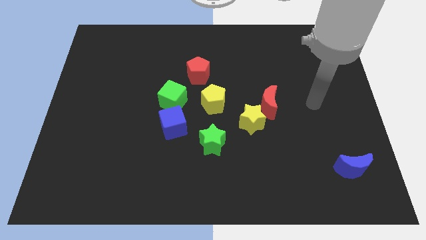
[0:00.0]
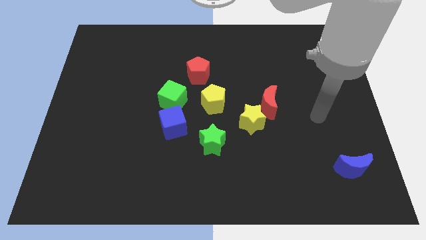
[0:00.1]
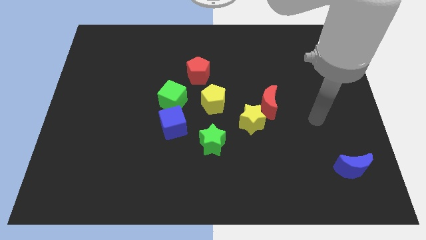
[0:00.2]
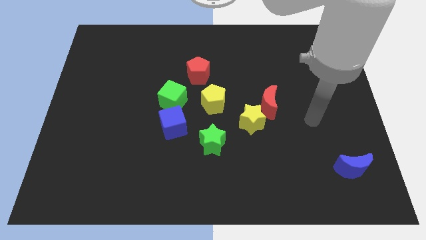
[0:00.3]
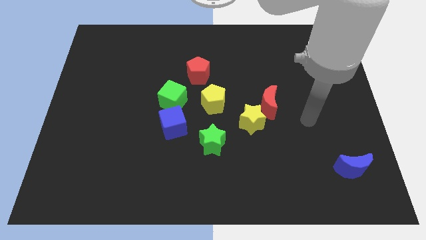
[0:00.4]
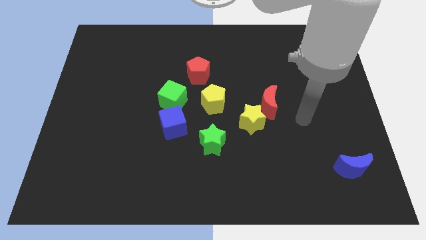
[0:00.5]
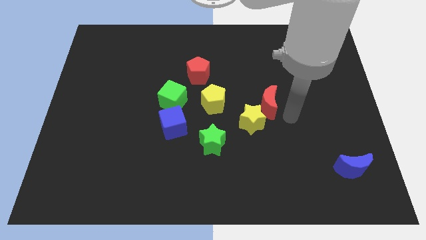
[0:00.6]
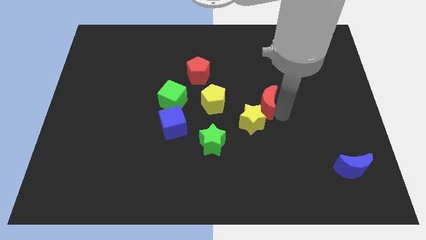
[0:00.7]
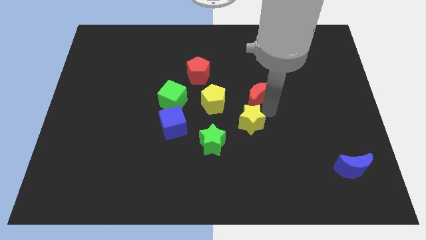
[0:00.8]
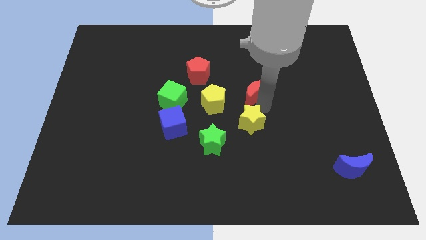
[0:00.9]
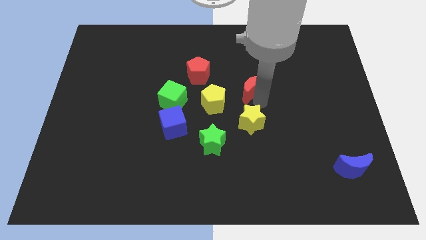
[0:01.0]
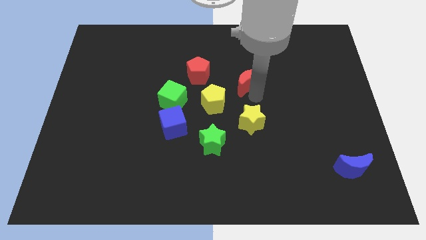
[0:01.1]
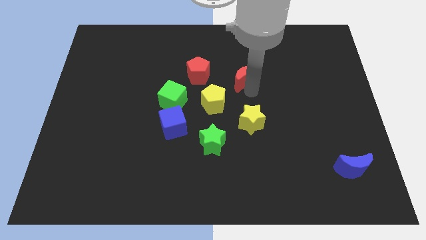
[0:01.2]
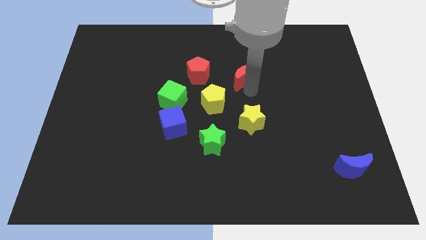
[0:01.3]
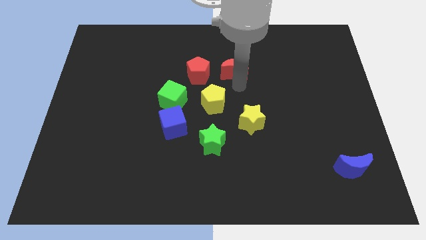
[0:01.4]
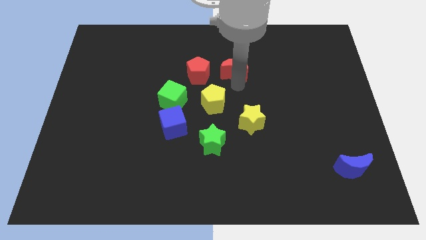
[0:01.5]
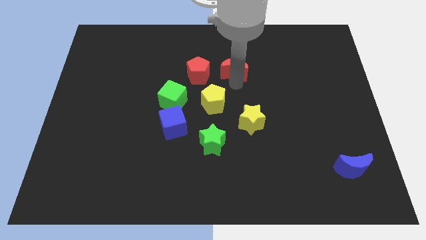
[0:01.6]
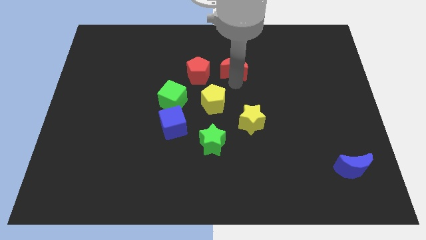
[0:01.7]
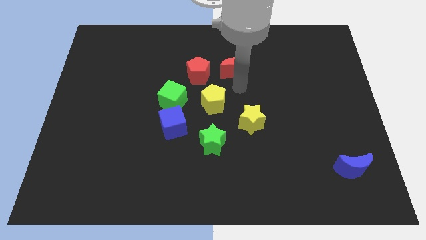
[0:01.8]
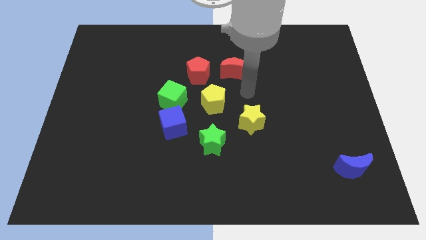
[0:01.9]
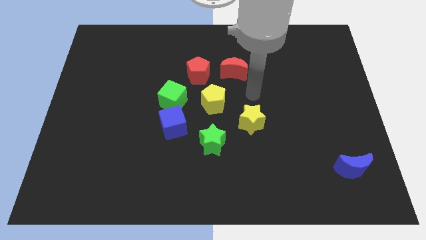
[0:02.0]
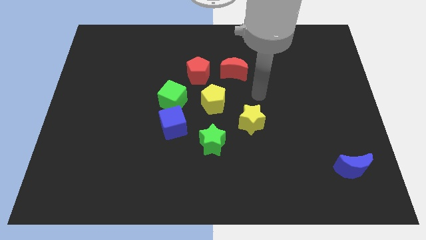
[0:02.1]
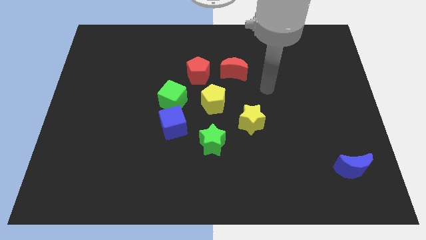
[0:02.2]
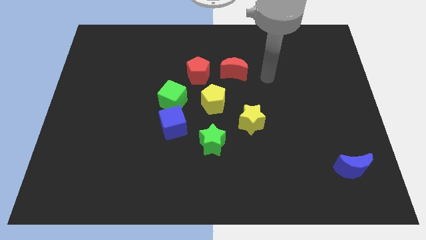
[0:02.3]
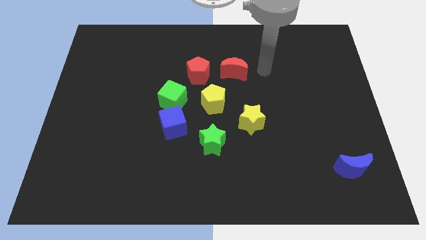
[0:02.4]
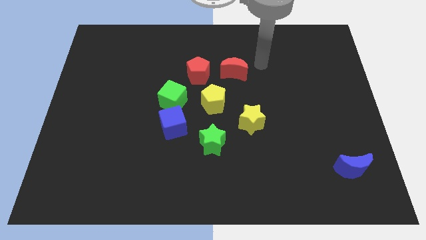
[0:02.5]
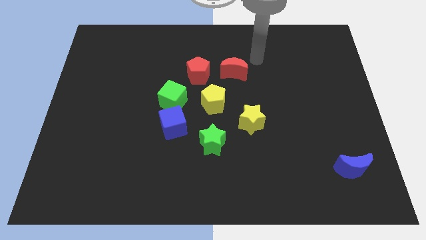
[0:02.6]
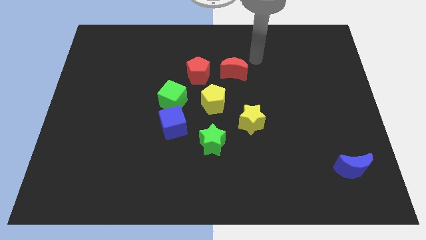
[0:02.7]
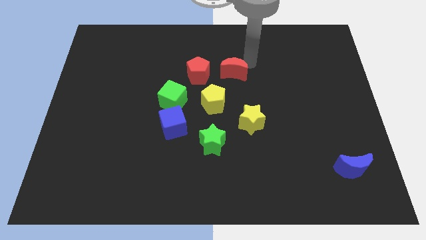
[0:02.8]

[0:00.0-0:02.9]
push the red moon right to the red pentagon

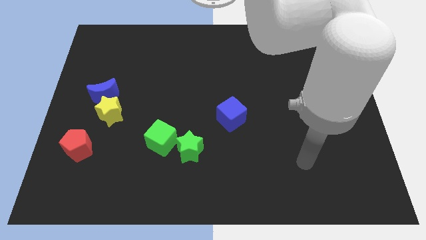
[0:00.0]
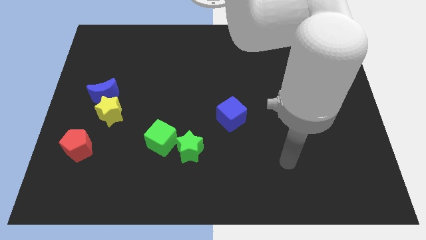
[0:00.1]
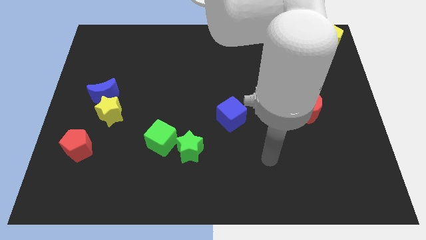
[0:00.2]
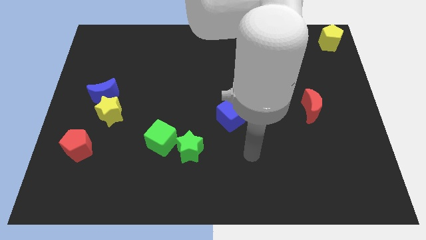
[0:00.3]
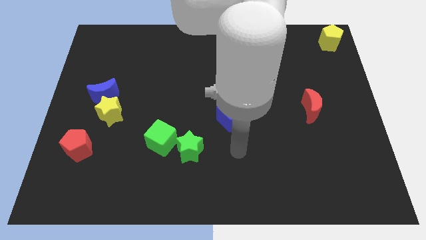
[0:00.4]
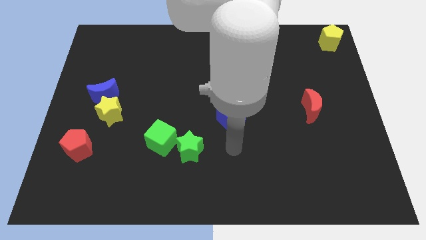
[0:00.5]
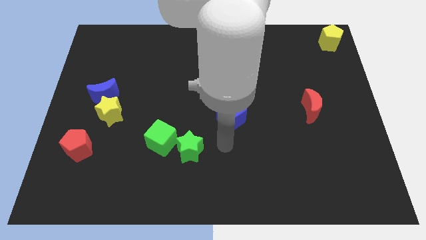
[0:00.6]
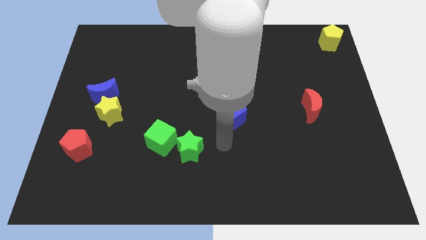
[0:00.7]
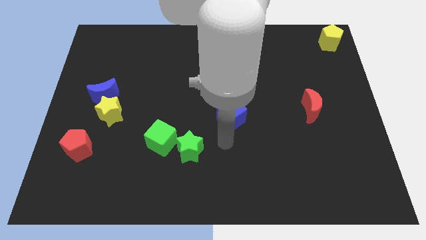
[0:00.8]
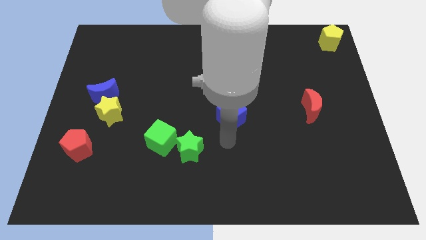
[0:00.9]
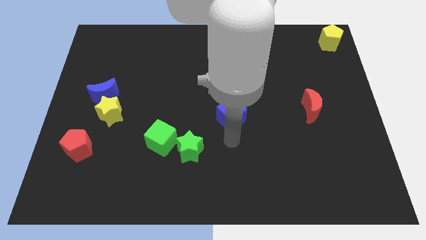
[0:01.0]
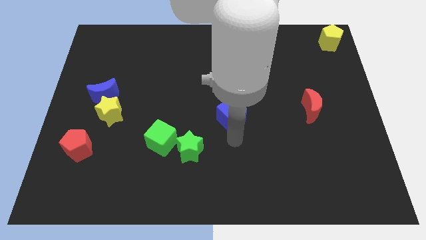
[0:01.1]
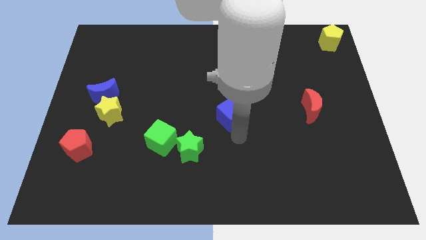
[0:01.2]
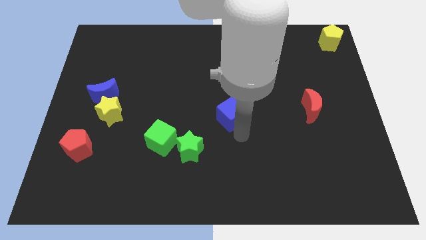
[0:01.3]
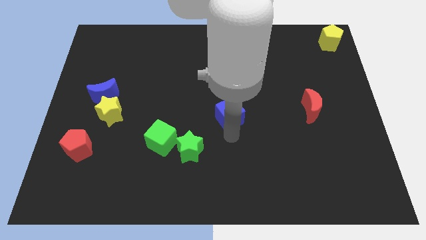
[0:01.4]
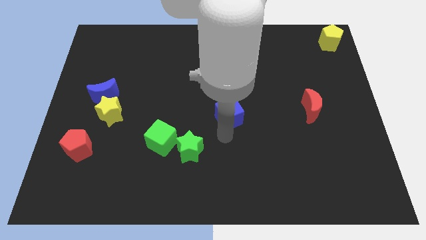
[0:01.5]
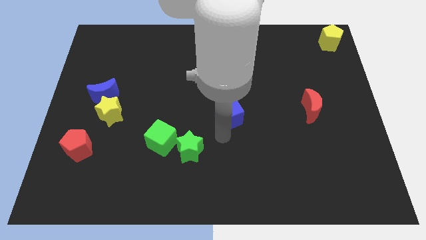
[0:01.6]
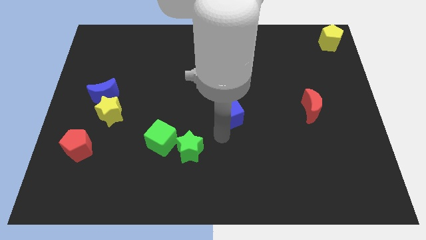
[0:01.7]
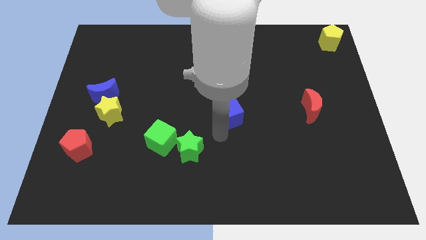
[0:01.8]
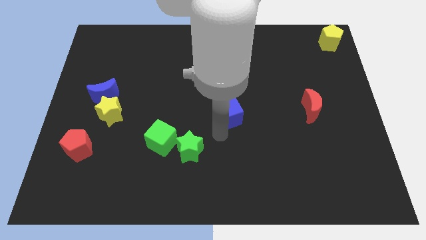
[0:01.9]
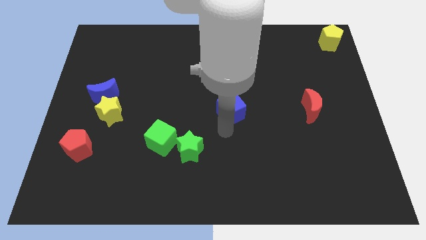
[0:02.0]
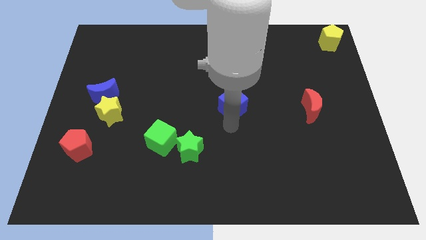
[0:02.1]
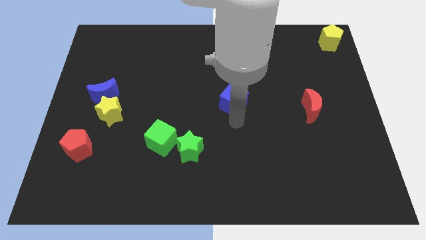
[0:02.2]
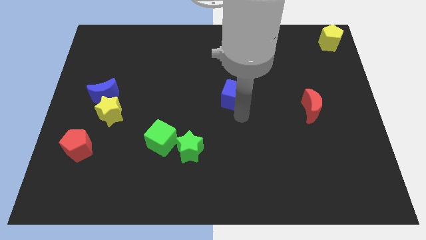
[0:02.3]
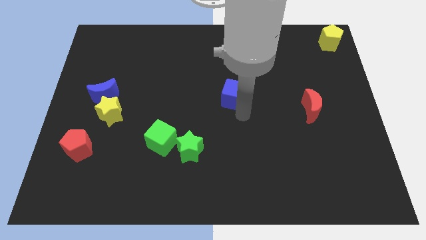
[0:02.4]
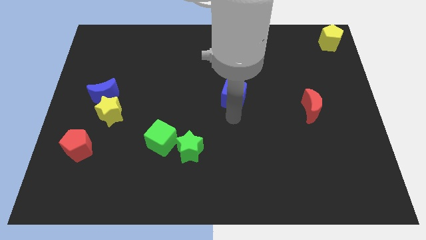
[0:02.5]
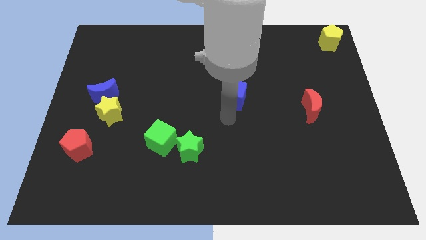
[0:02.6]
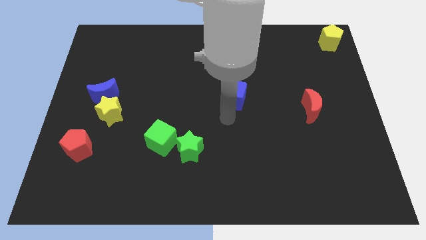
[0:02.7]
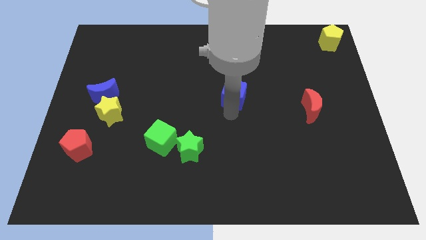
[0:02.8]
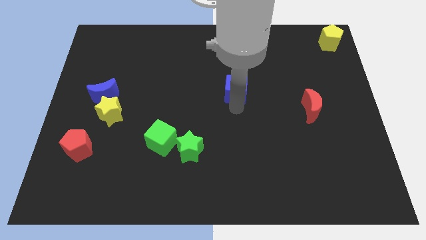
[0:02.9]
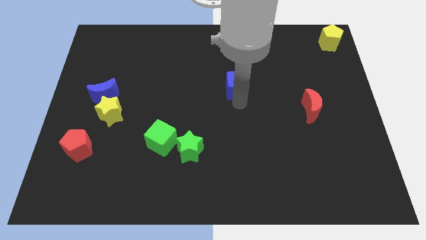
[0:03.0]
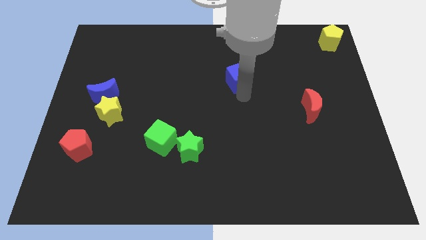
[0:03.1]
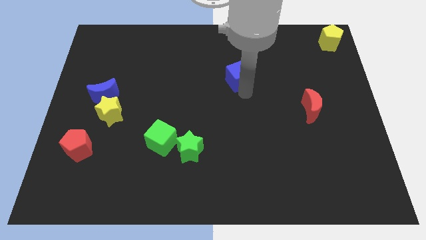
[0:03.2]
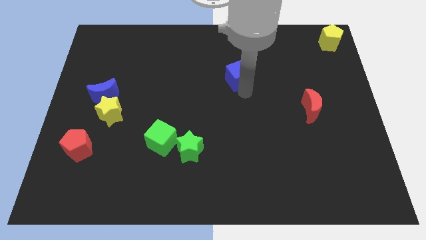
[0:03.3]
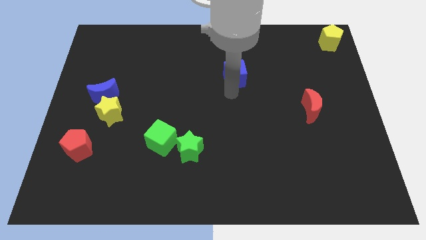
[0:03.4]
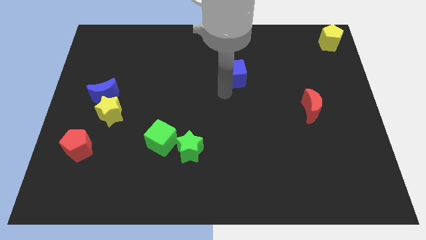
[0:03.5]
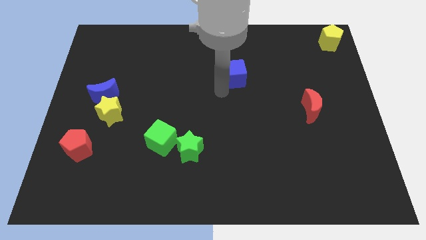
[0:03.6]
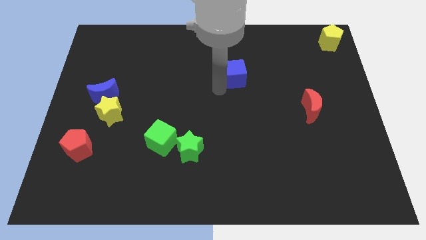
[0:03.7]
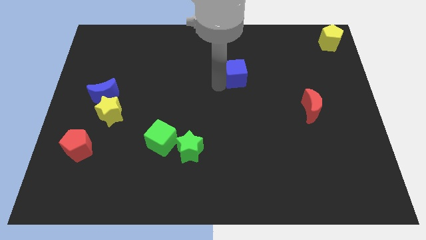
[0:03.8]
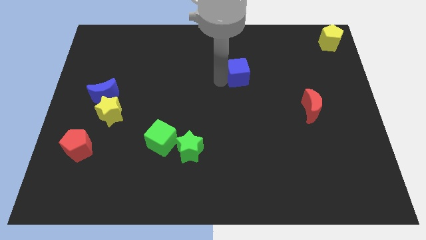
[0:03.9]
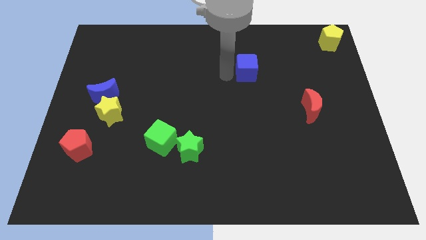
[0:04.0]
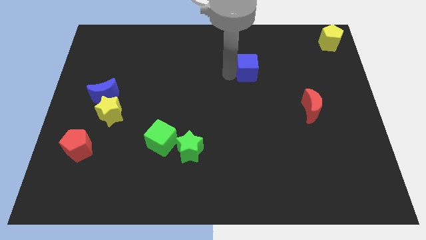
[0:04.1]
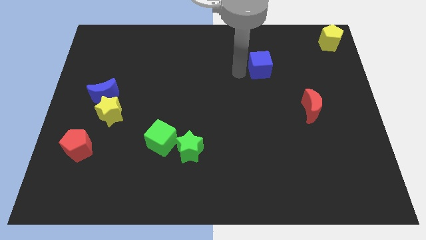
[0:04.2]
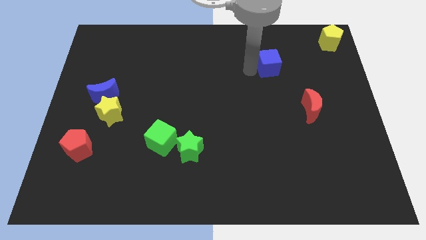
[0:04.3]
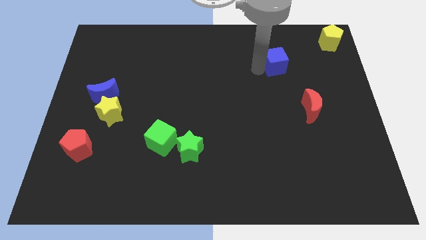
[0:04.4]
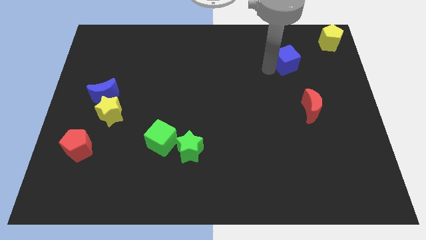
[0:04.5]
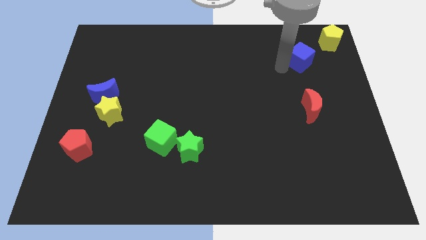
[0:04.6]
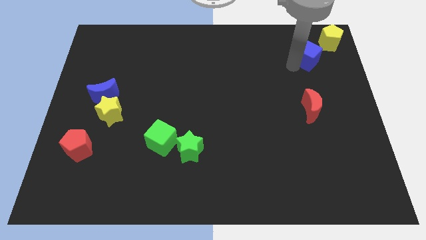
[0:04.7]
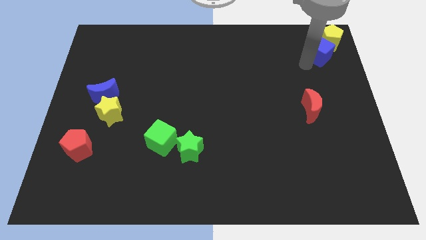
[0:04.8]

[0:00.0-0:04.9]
join the blue cube with the yellow pentagon

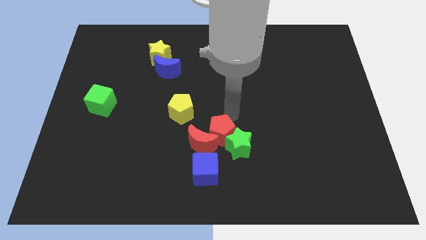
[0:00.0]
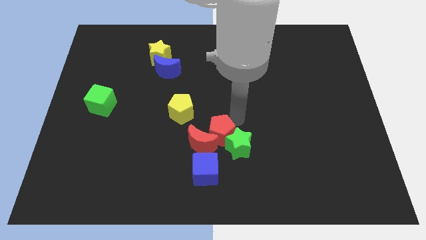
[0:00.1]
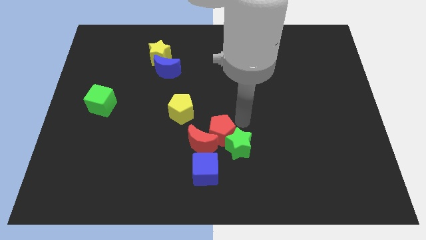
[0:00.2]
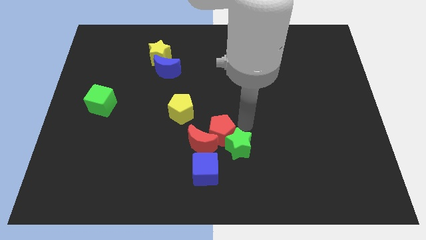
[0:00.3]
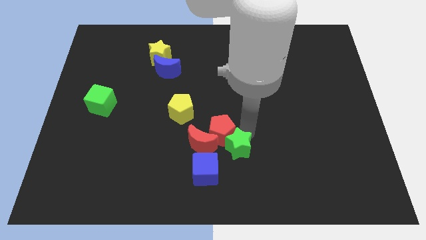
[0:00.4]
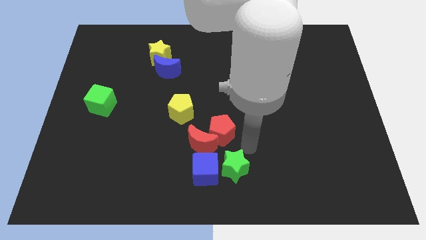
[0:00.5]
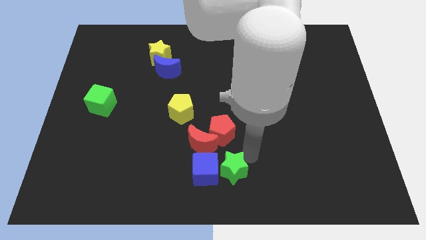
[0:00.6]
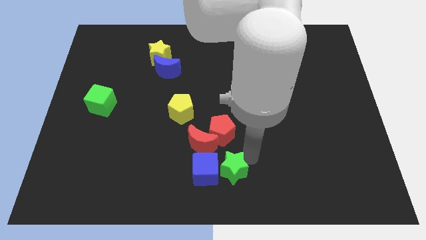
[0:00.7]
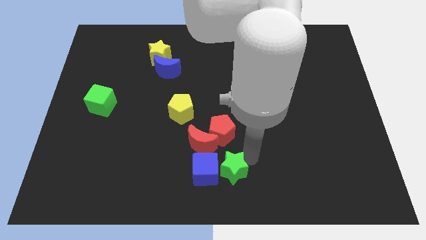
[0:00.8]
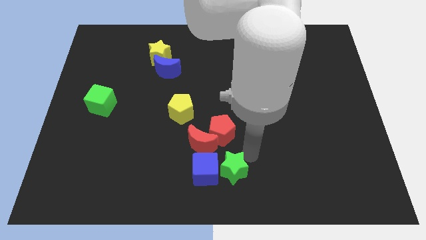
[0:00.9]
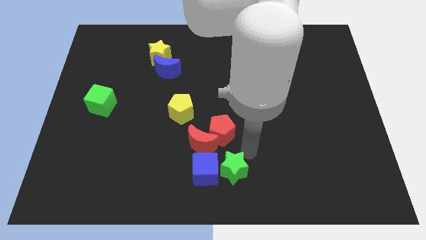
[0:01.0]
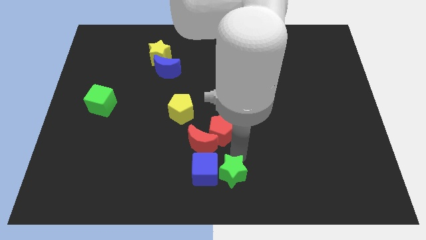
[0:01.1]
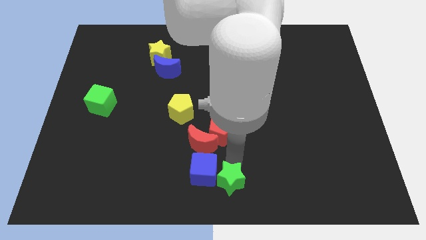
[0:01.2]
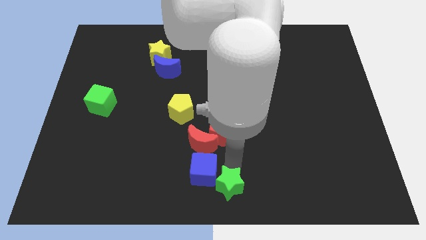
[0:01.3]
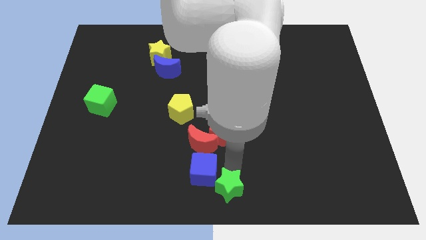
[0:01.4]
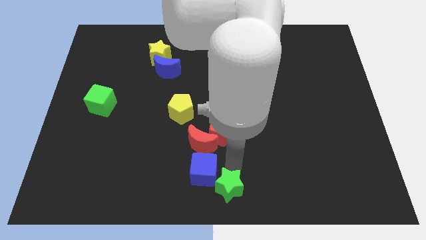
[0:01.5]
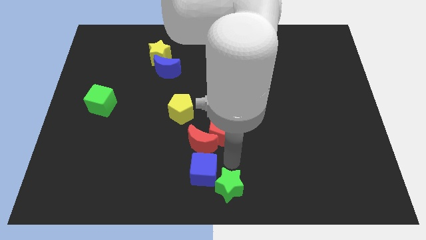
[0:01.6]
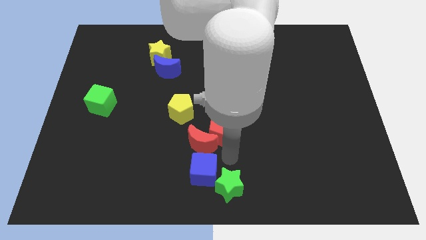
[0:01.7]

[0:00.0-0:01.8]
push the green star towards bottom center of the board
